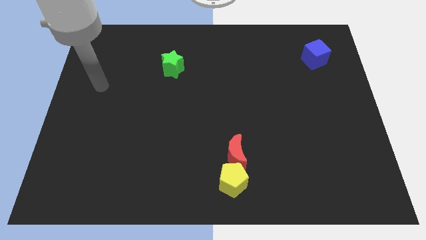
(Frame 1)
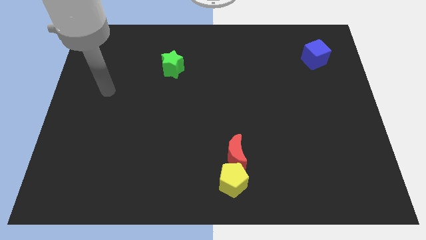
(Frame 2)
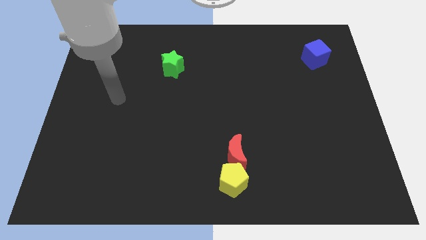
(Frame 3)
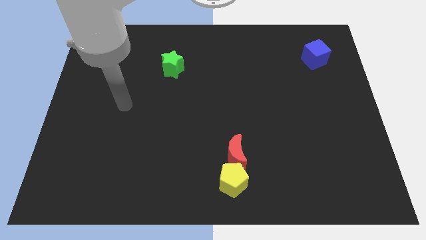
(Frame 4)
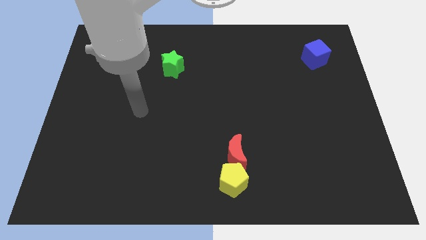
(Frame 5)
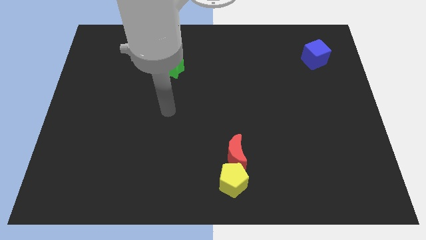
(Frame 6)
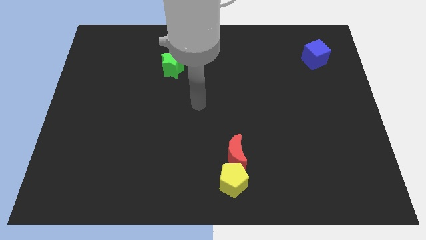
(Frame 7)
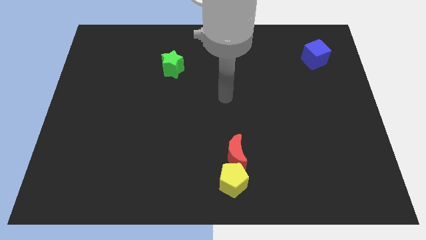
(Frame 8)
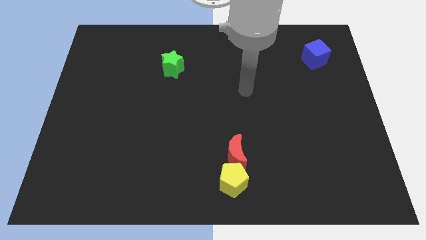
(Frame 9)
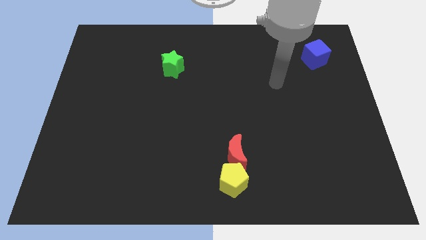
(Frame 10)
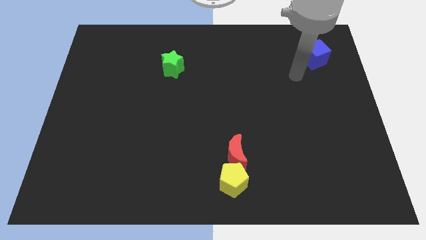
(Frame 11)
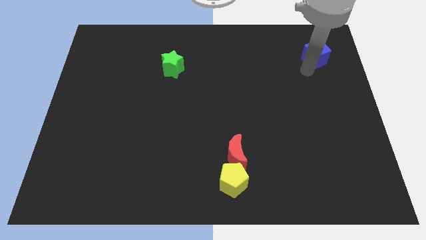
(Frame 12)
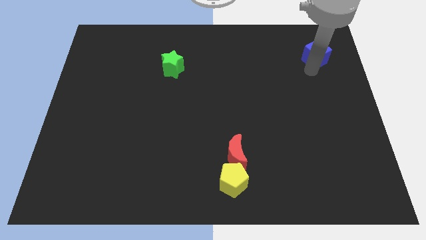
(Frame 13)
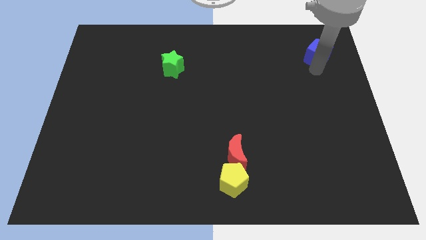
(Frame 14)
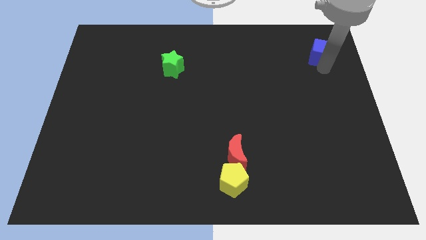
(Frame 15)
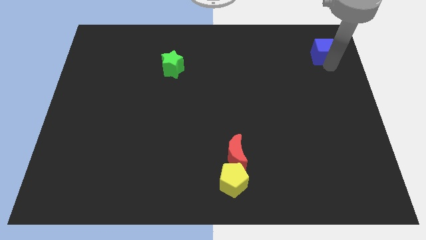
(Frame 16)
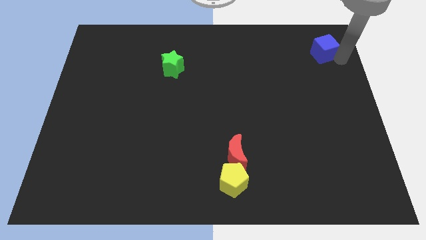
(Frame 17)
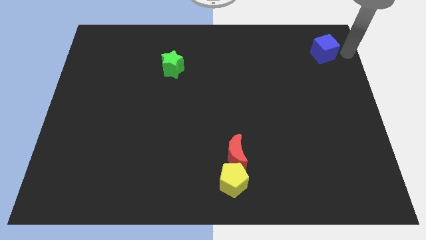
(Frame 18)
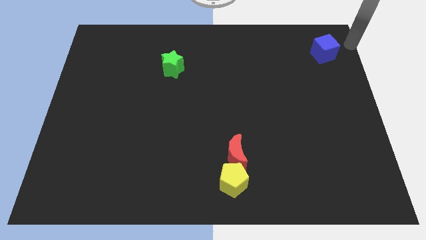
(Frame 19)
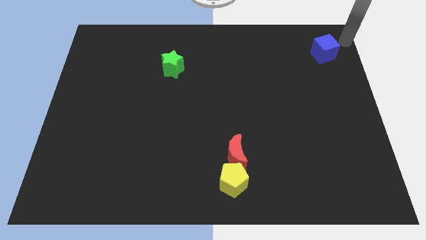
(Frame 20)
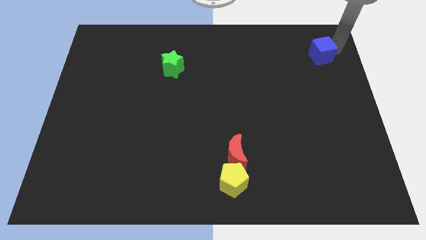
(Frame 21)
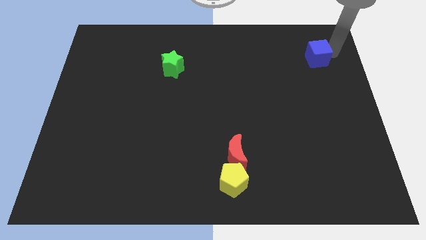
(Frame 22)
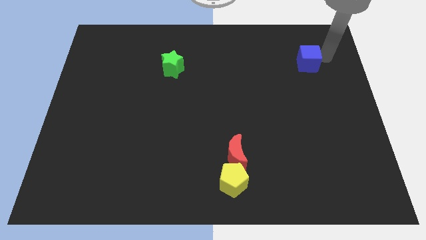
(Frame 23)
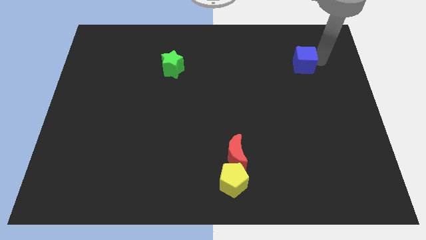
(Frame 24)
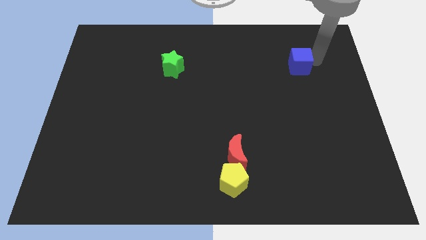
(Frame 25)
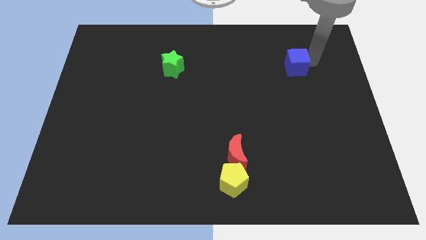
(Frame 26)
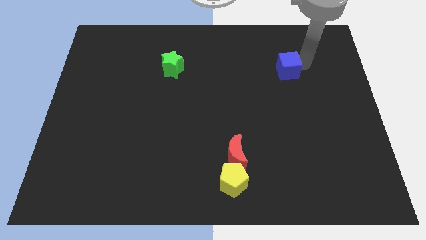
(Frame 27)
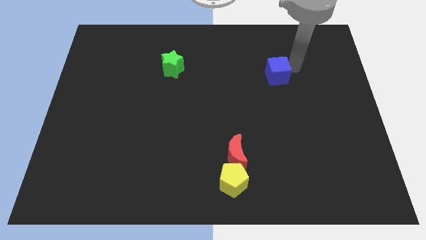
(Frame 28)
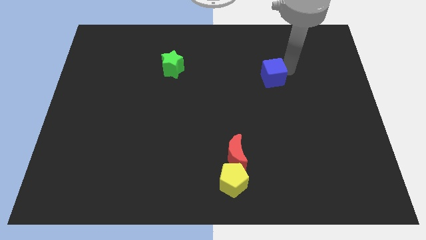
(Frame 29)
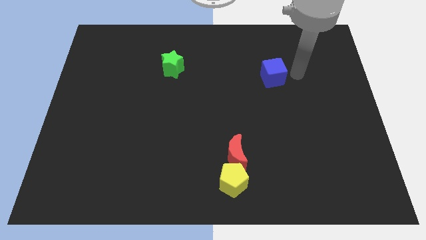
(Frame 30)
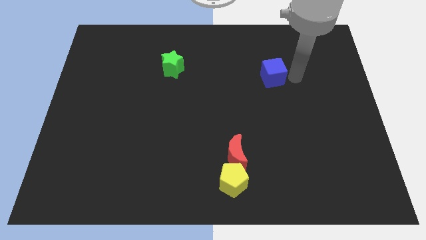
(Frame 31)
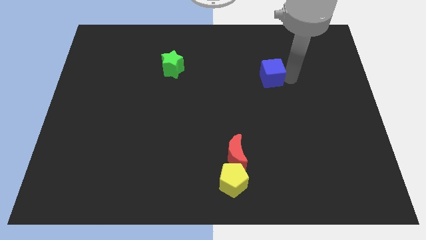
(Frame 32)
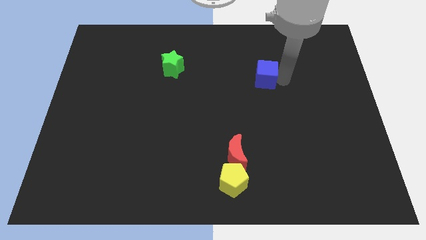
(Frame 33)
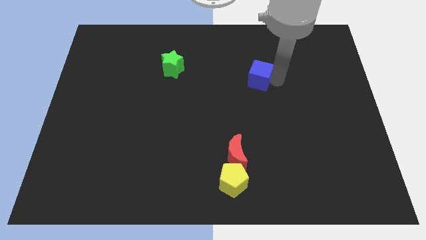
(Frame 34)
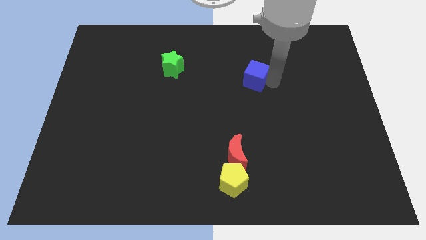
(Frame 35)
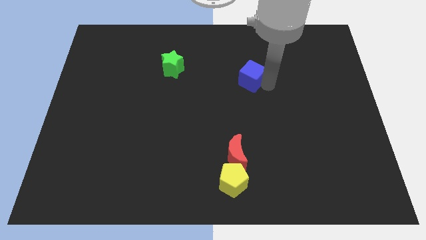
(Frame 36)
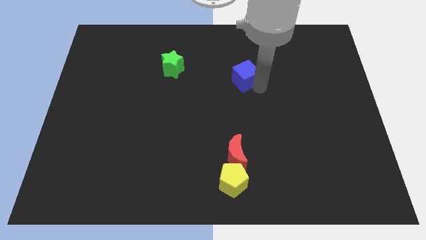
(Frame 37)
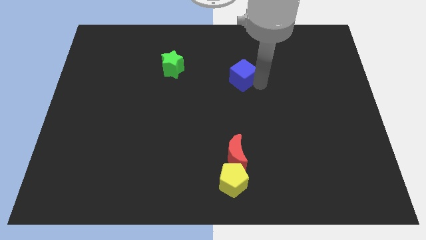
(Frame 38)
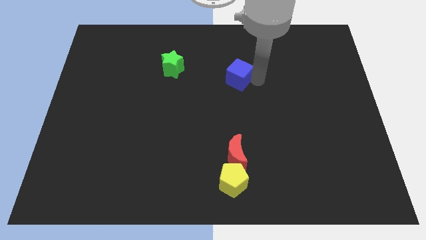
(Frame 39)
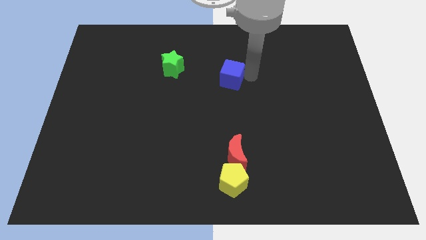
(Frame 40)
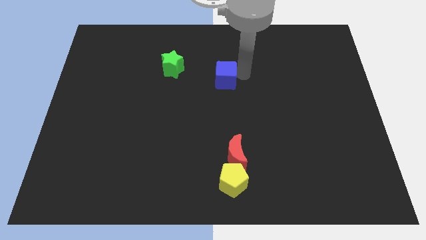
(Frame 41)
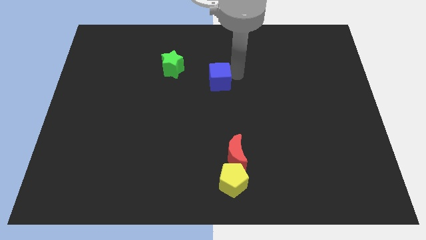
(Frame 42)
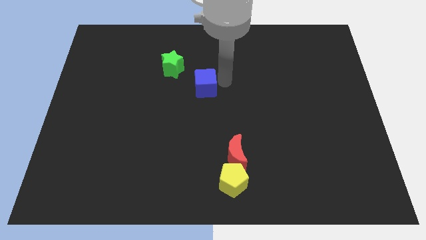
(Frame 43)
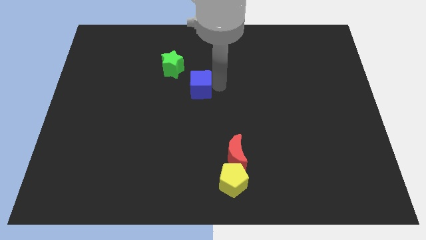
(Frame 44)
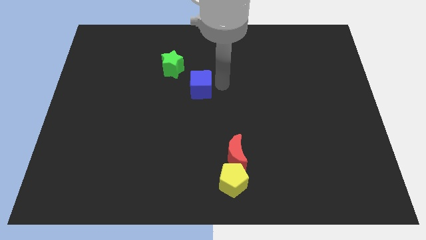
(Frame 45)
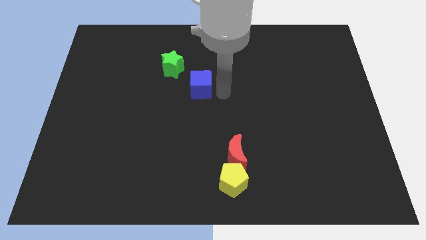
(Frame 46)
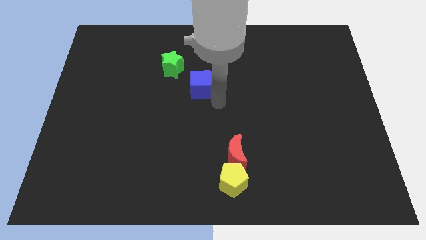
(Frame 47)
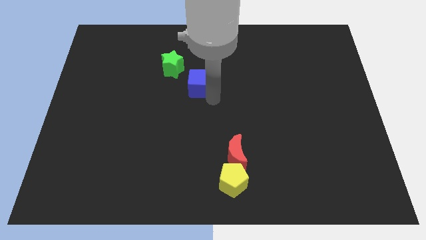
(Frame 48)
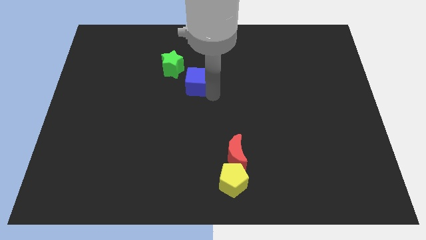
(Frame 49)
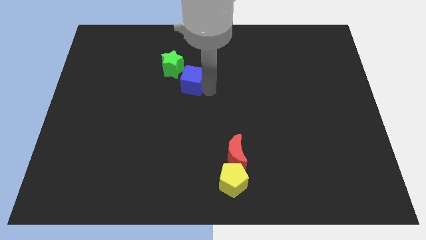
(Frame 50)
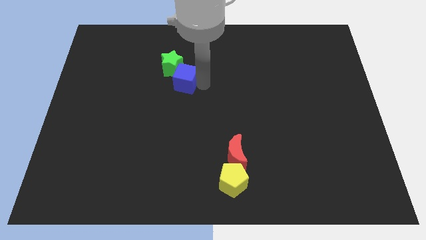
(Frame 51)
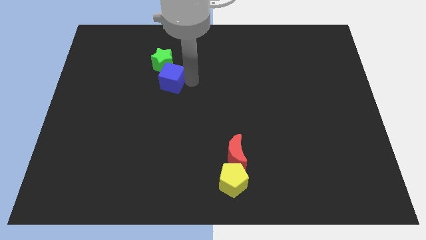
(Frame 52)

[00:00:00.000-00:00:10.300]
slide the cube next to the green block

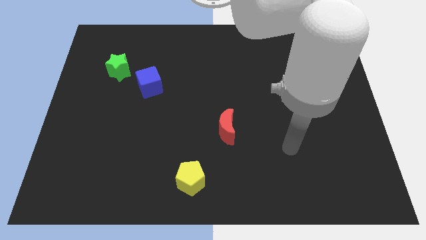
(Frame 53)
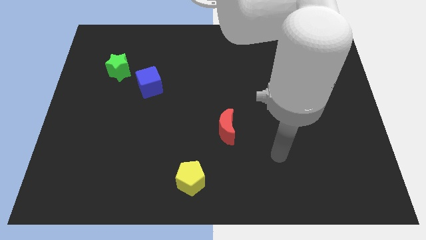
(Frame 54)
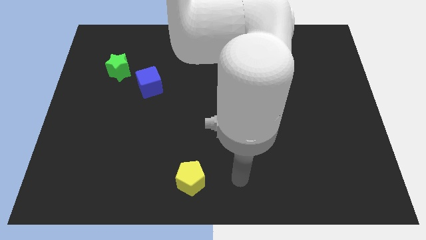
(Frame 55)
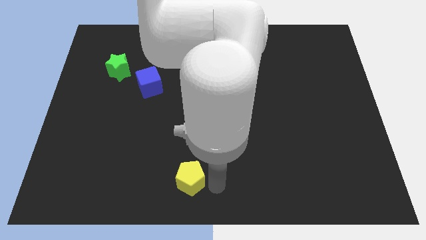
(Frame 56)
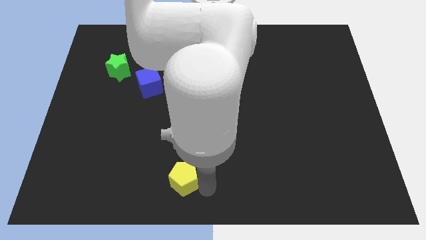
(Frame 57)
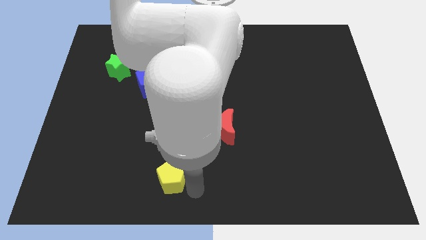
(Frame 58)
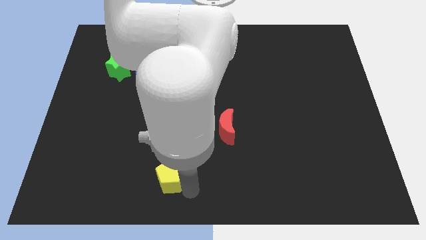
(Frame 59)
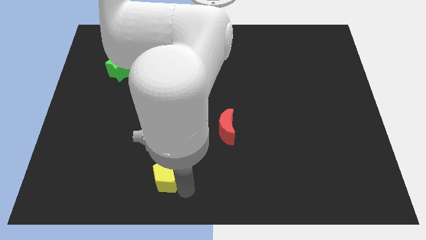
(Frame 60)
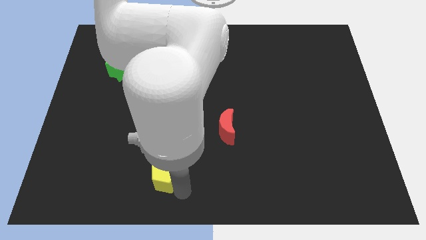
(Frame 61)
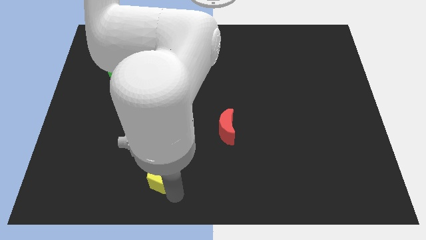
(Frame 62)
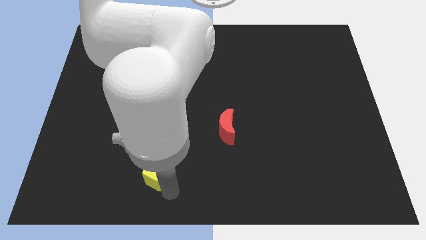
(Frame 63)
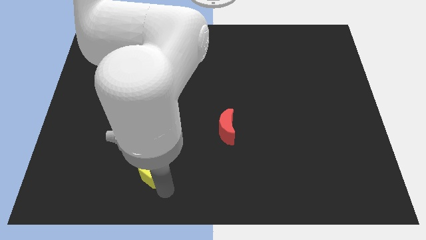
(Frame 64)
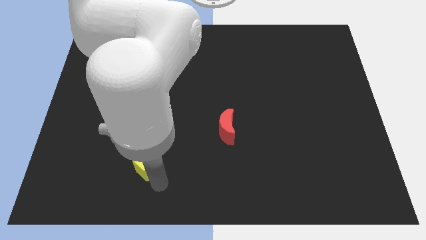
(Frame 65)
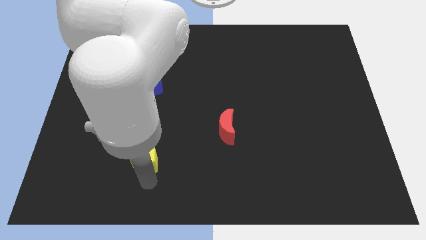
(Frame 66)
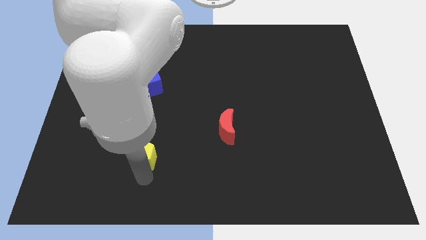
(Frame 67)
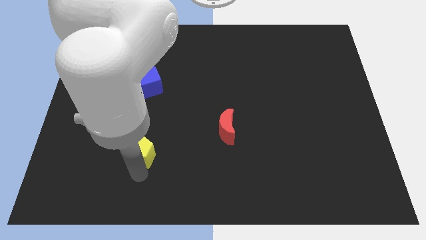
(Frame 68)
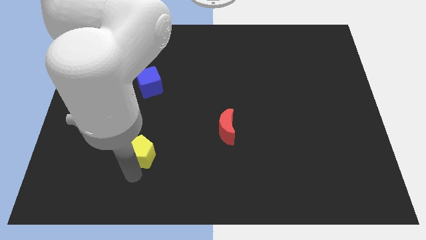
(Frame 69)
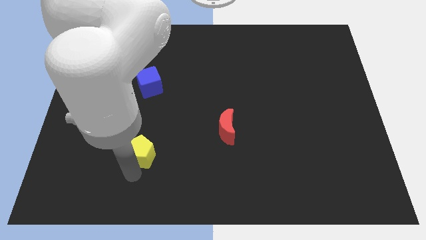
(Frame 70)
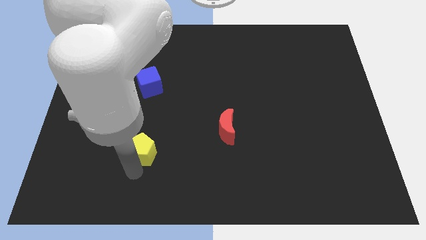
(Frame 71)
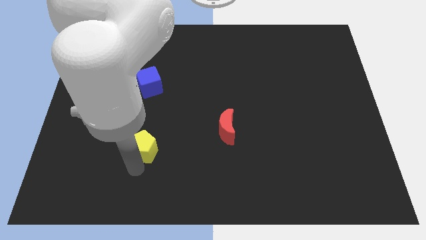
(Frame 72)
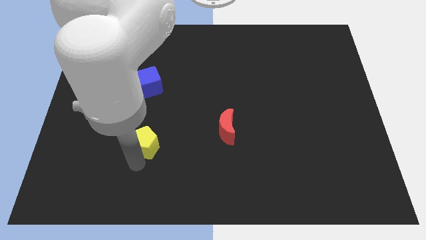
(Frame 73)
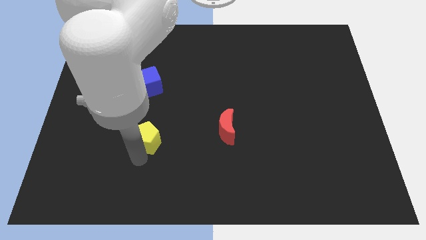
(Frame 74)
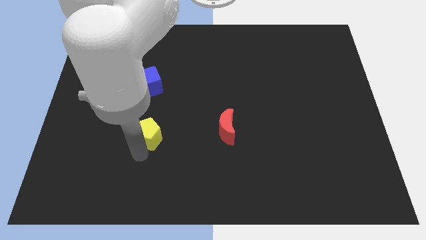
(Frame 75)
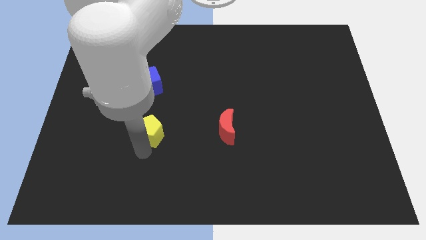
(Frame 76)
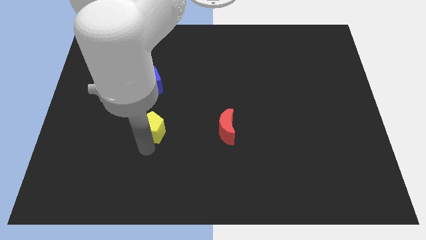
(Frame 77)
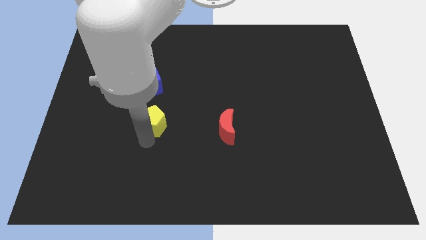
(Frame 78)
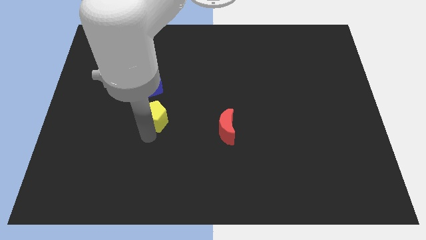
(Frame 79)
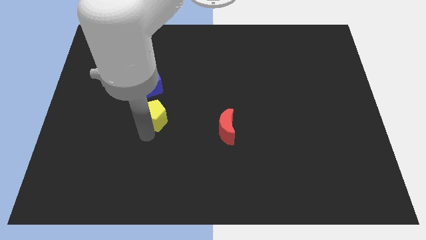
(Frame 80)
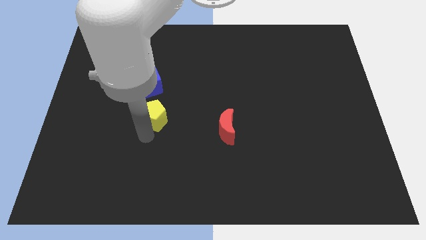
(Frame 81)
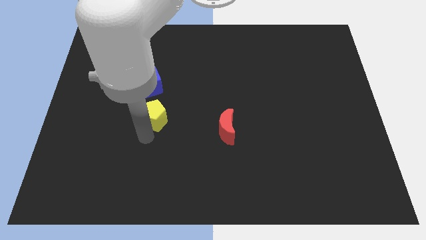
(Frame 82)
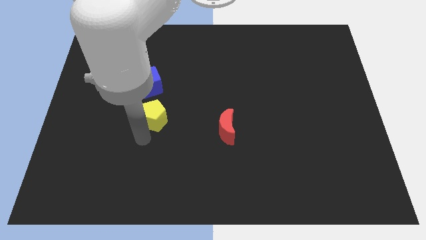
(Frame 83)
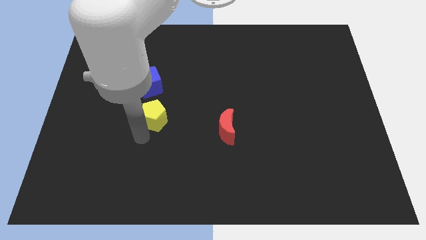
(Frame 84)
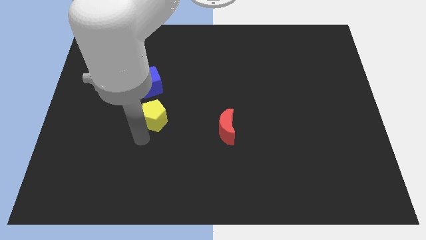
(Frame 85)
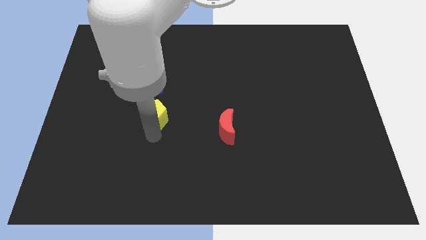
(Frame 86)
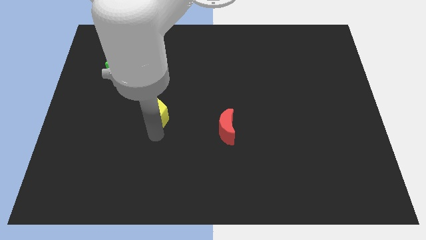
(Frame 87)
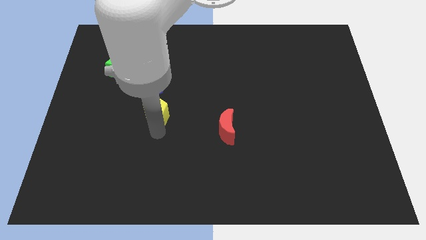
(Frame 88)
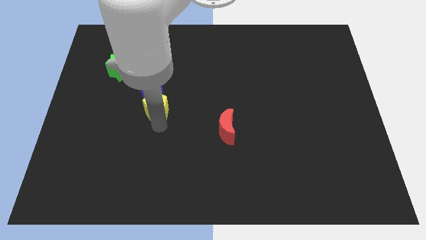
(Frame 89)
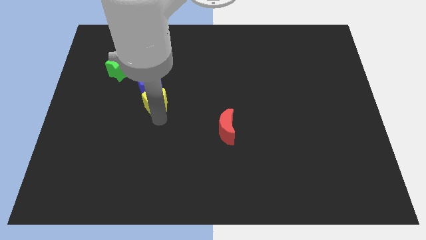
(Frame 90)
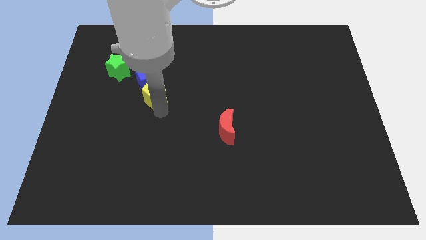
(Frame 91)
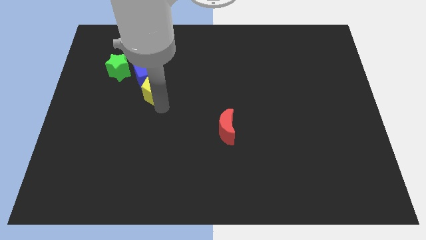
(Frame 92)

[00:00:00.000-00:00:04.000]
move the pentagon towards the cube
